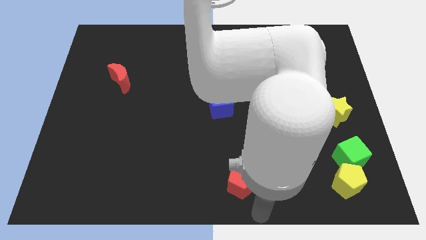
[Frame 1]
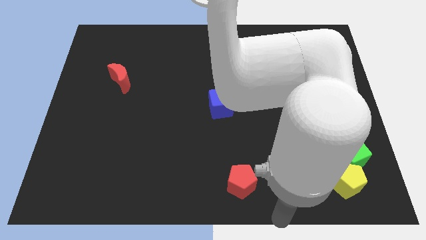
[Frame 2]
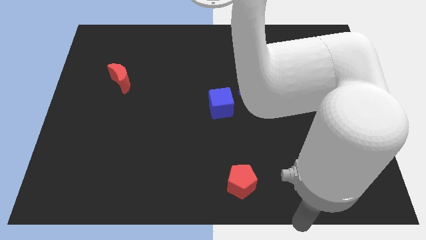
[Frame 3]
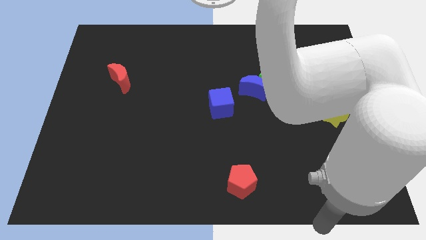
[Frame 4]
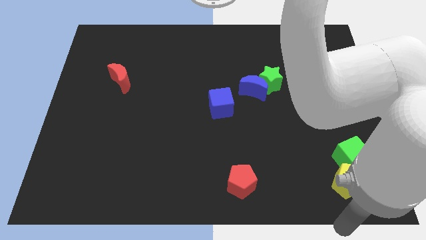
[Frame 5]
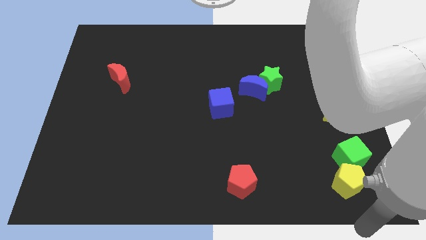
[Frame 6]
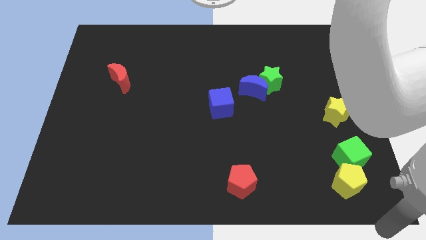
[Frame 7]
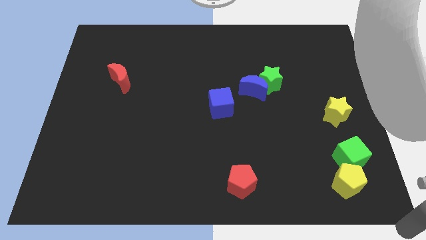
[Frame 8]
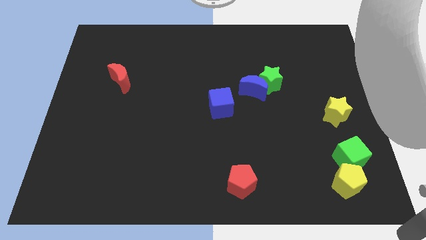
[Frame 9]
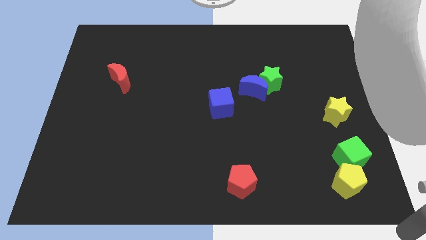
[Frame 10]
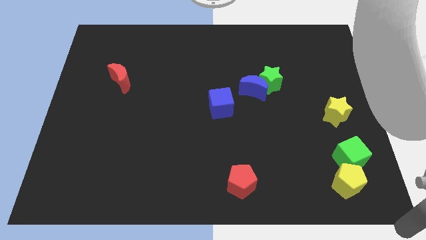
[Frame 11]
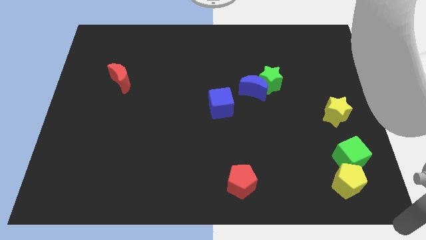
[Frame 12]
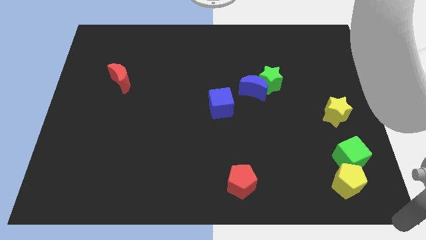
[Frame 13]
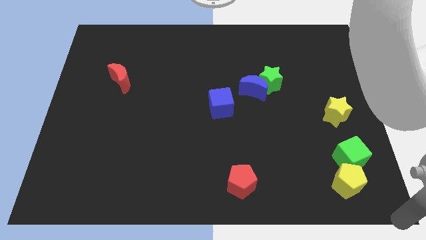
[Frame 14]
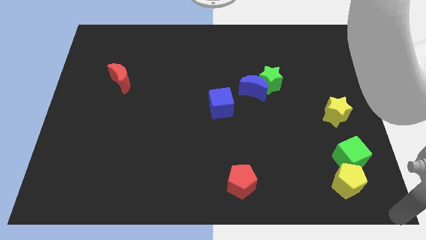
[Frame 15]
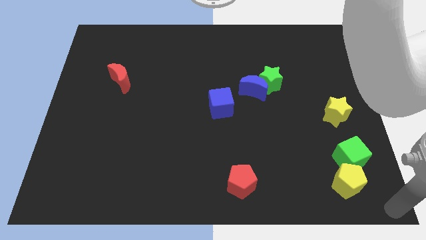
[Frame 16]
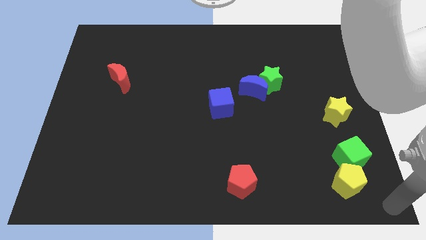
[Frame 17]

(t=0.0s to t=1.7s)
move your arm to the bottom right corner of the board

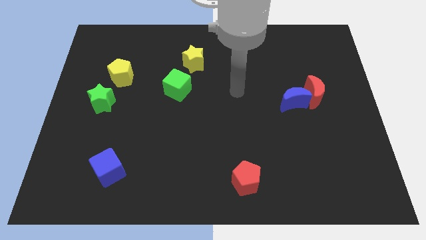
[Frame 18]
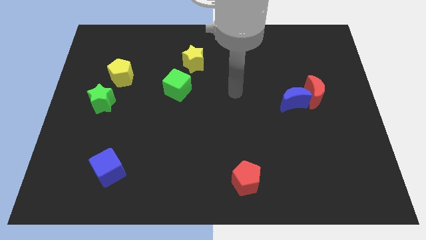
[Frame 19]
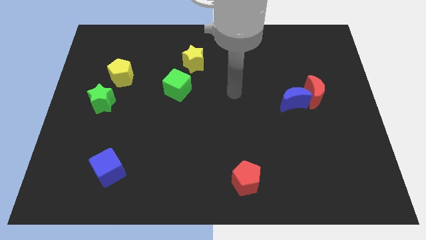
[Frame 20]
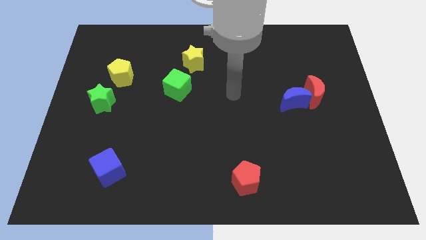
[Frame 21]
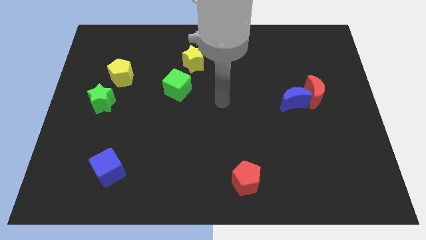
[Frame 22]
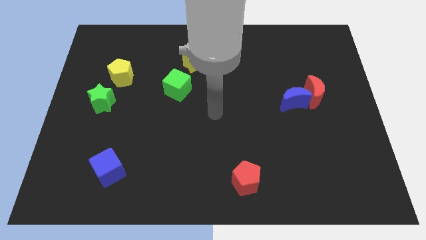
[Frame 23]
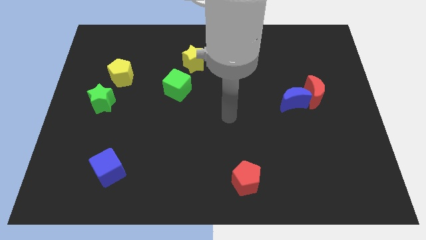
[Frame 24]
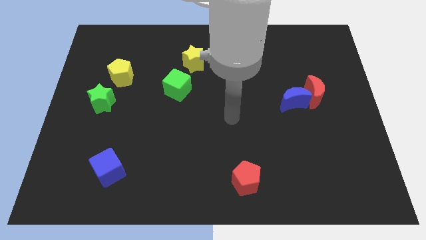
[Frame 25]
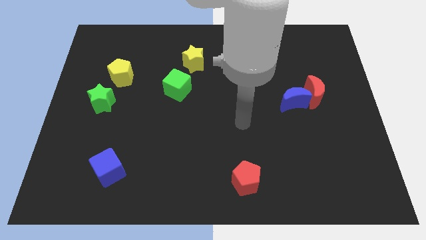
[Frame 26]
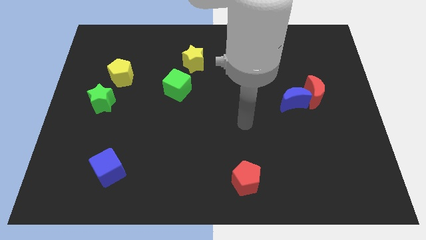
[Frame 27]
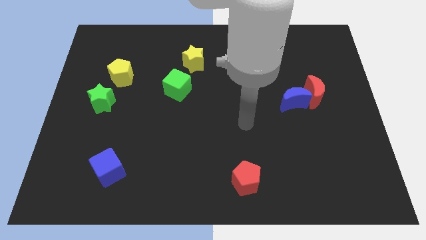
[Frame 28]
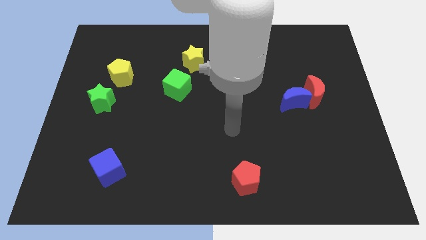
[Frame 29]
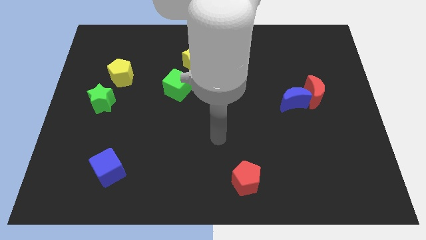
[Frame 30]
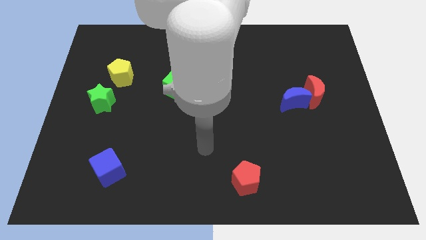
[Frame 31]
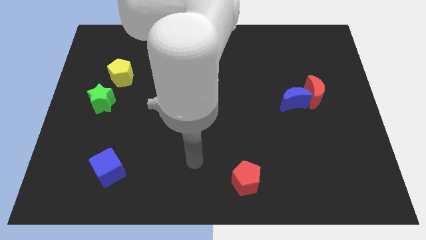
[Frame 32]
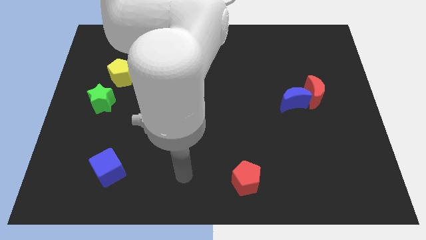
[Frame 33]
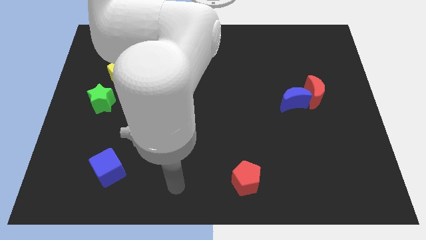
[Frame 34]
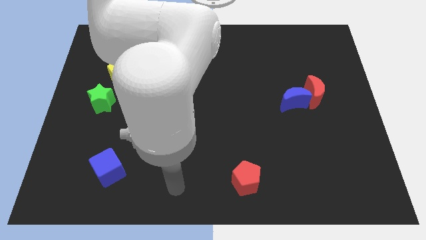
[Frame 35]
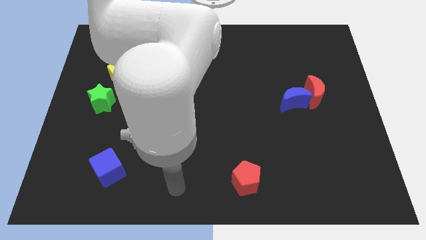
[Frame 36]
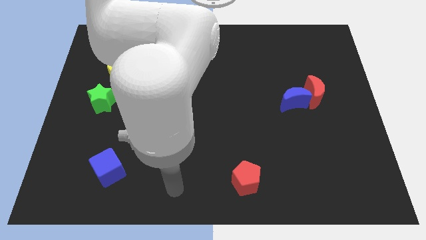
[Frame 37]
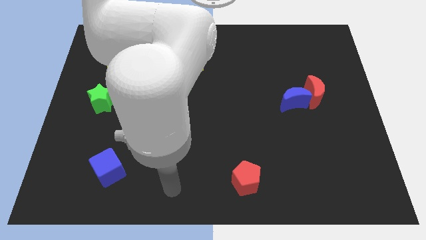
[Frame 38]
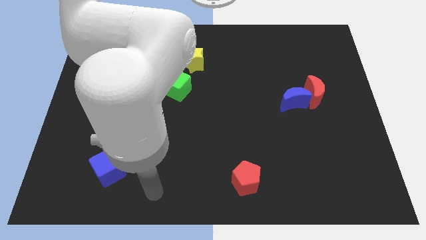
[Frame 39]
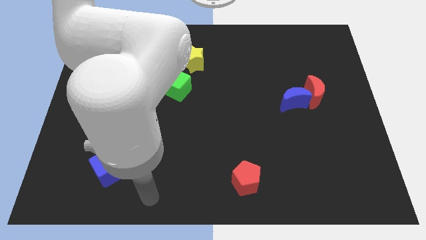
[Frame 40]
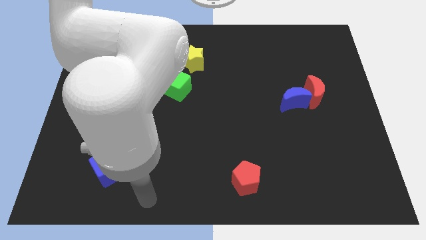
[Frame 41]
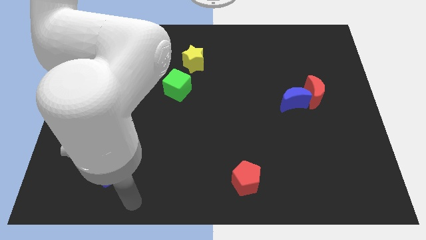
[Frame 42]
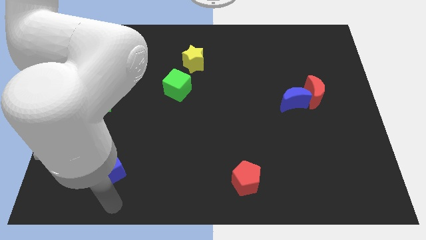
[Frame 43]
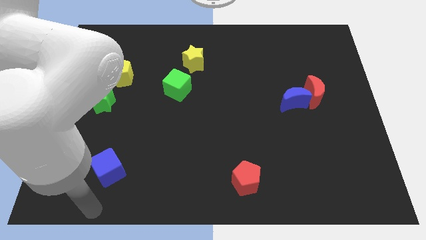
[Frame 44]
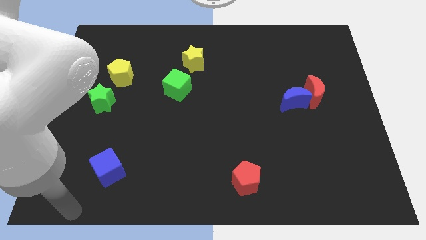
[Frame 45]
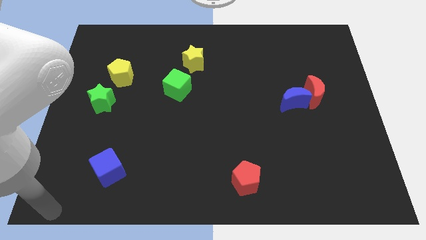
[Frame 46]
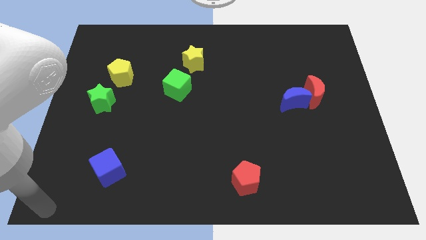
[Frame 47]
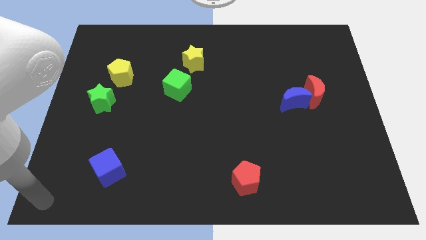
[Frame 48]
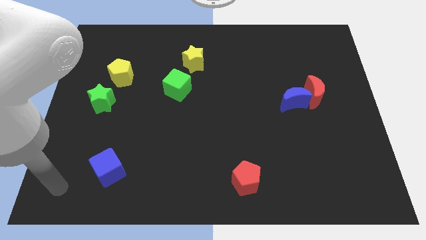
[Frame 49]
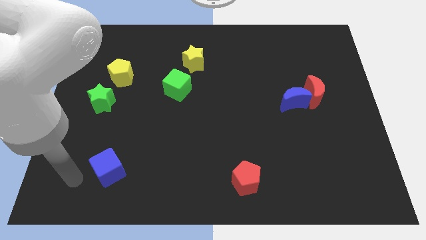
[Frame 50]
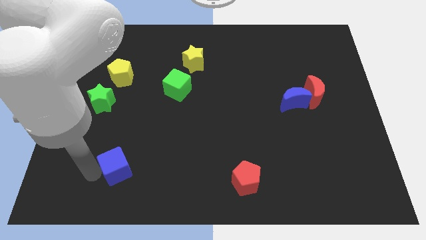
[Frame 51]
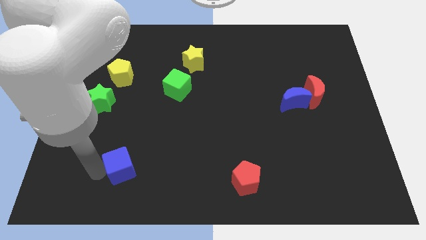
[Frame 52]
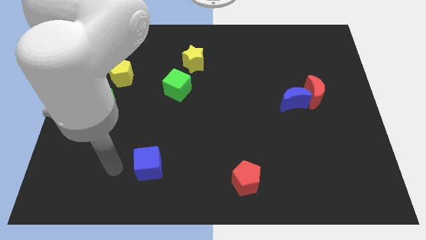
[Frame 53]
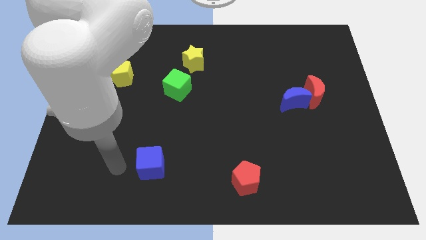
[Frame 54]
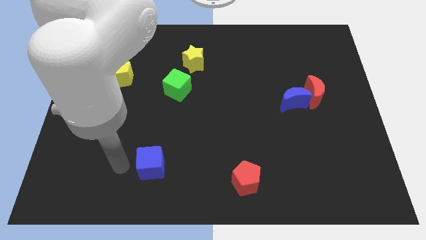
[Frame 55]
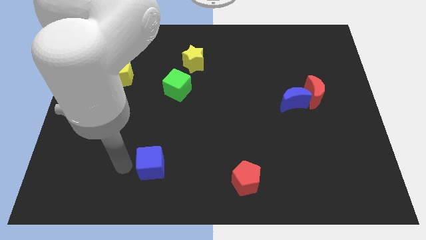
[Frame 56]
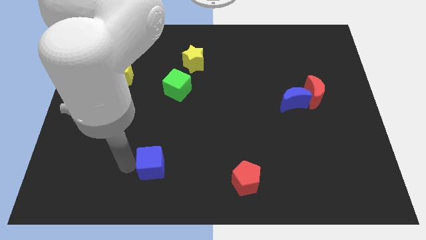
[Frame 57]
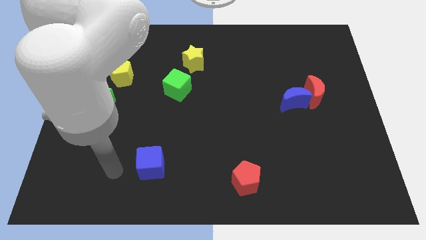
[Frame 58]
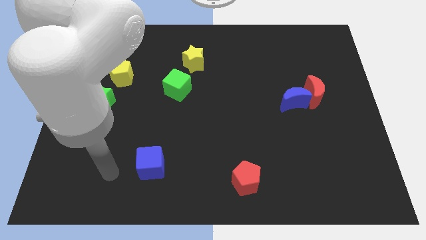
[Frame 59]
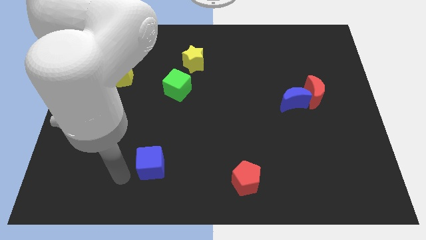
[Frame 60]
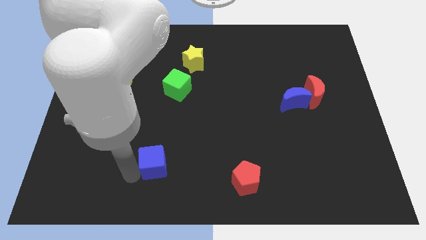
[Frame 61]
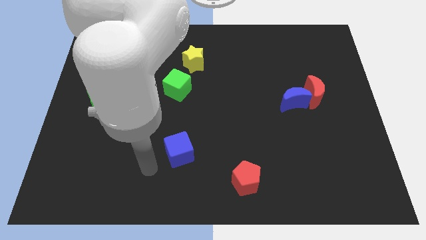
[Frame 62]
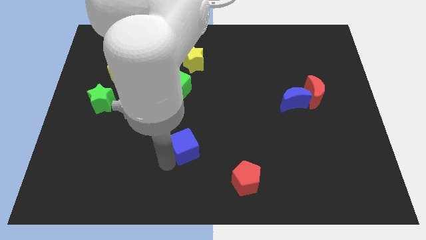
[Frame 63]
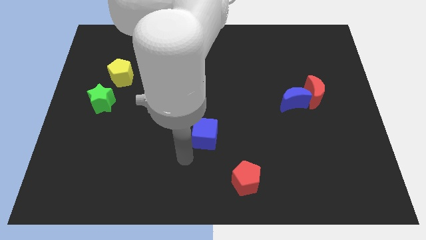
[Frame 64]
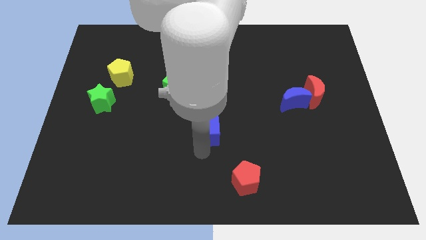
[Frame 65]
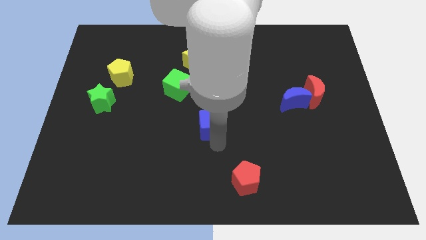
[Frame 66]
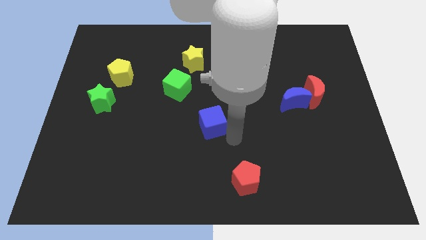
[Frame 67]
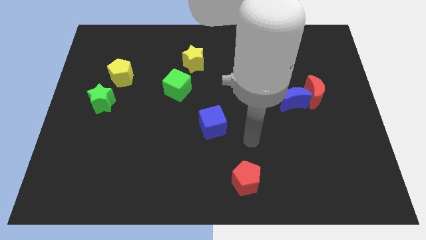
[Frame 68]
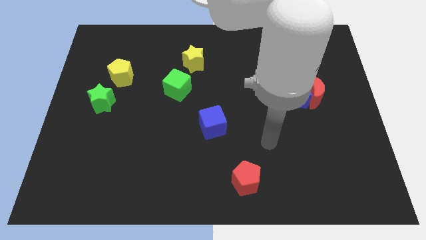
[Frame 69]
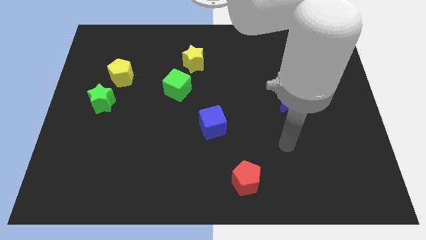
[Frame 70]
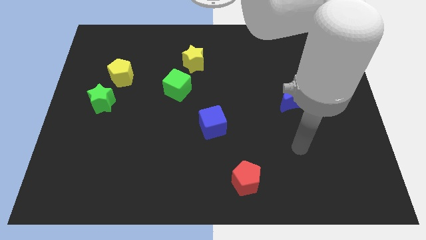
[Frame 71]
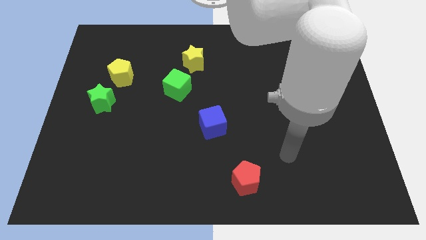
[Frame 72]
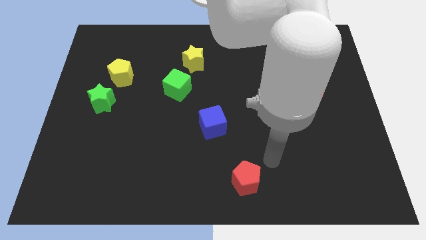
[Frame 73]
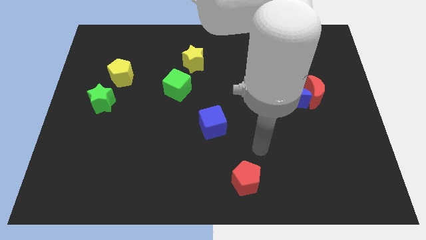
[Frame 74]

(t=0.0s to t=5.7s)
move the blue cube to center of the board

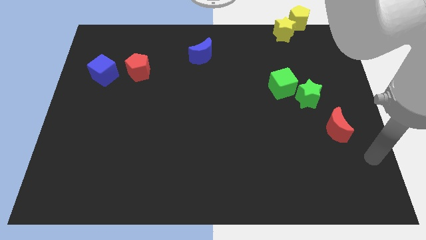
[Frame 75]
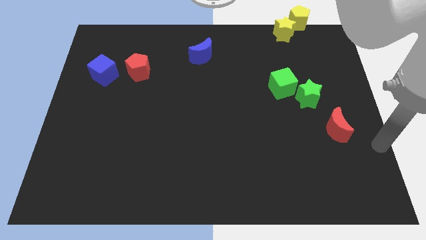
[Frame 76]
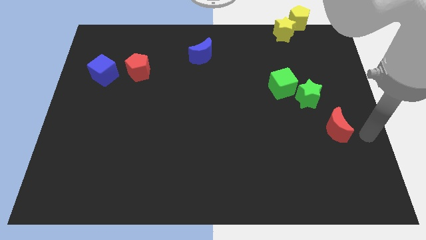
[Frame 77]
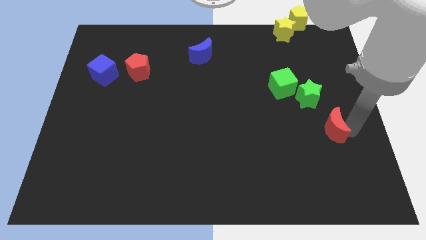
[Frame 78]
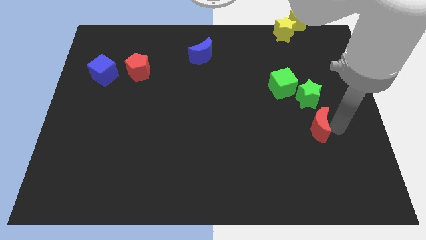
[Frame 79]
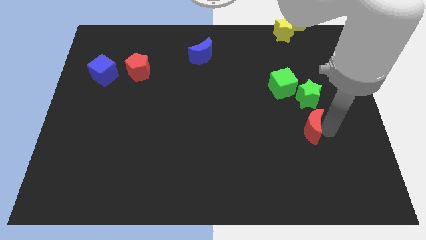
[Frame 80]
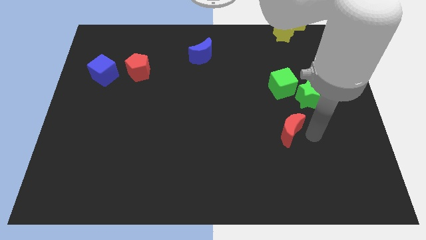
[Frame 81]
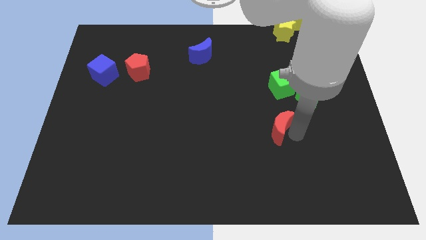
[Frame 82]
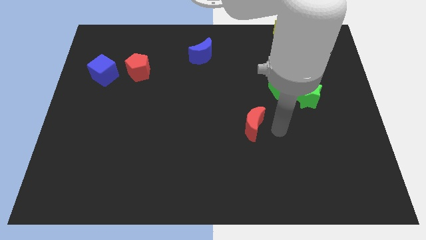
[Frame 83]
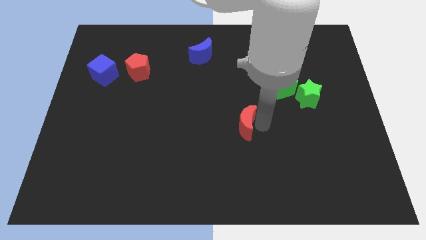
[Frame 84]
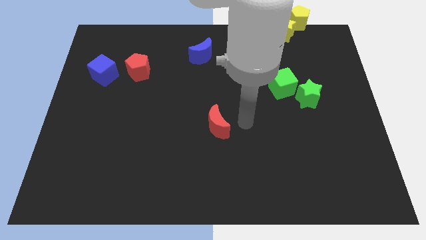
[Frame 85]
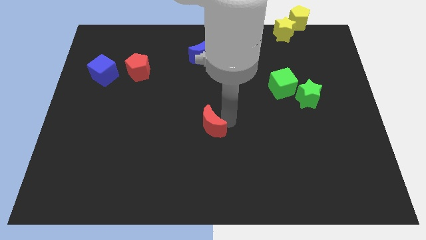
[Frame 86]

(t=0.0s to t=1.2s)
move the red crescent to the center of the board

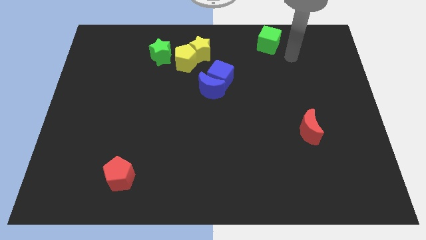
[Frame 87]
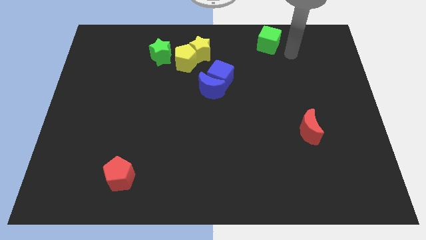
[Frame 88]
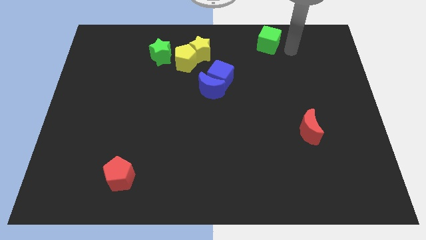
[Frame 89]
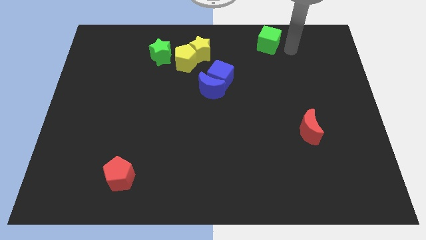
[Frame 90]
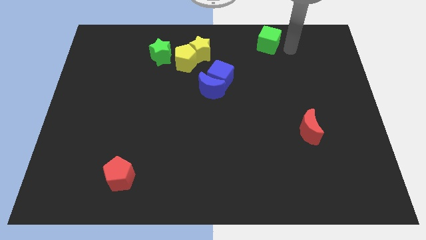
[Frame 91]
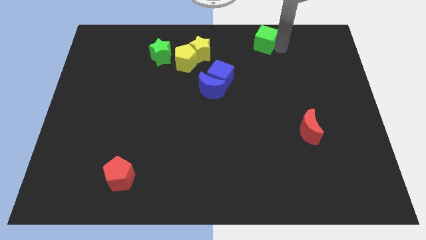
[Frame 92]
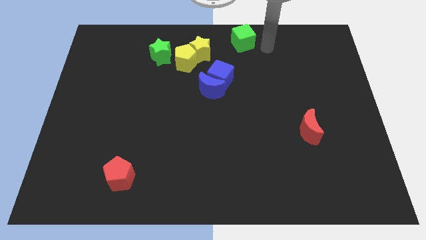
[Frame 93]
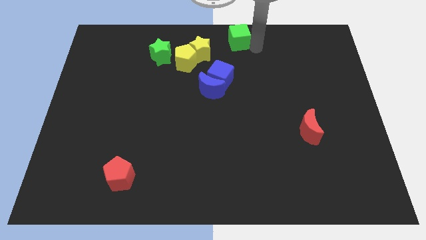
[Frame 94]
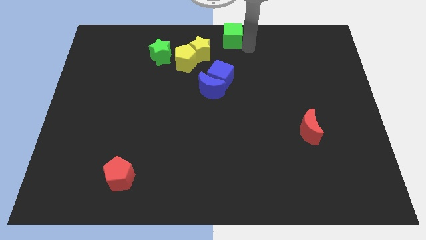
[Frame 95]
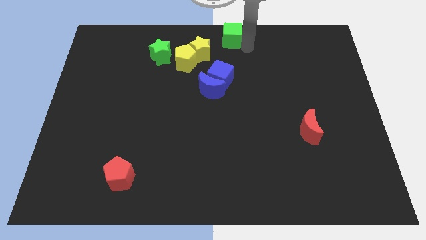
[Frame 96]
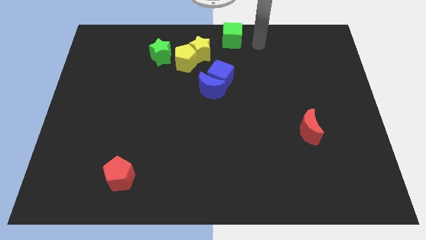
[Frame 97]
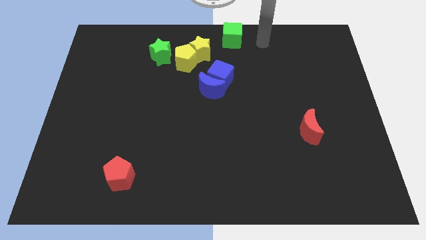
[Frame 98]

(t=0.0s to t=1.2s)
place the green cube at the top center of the board
